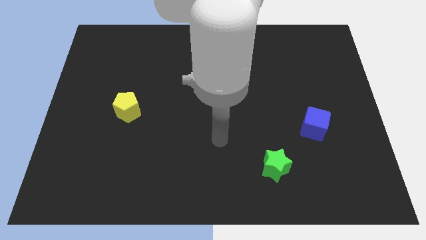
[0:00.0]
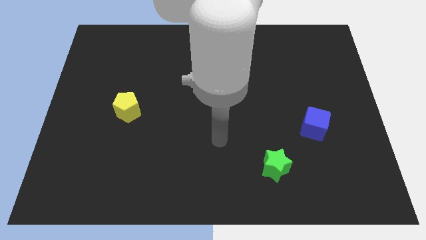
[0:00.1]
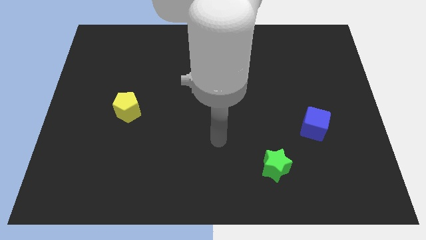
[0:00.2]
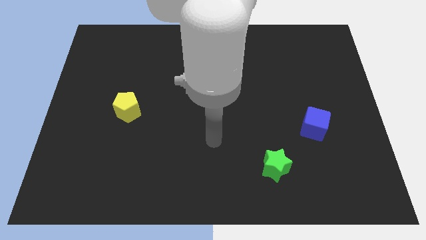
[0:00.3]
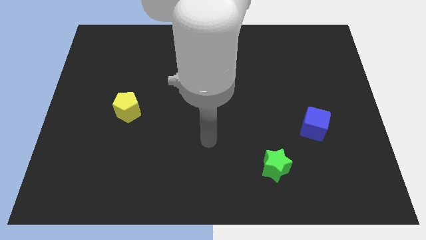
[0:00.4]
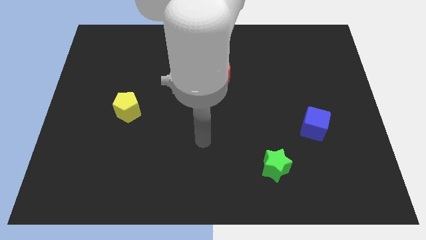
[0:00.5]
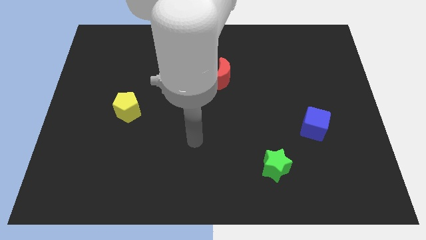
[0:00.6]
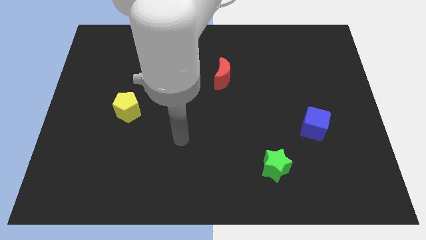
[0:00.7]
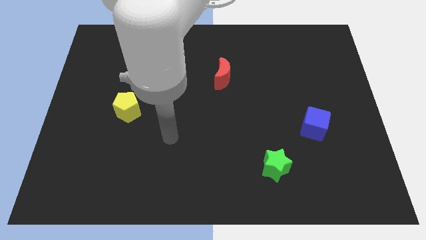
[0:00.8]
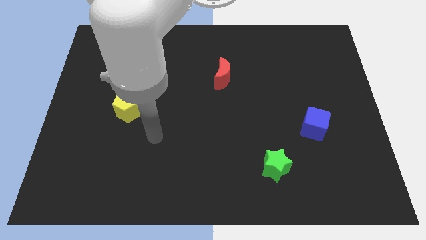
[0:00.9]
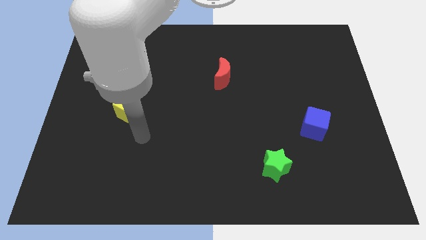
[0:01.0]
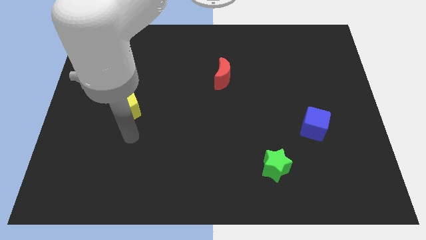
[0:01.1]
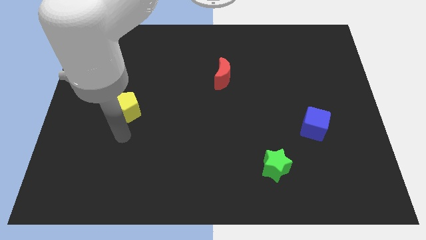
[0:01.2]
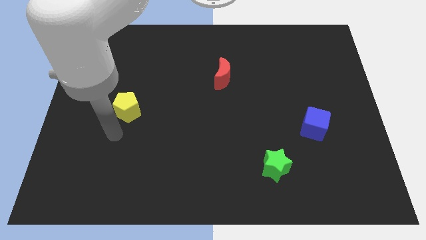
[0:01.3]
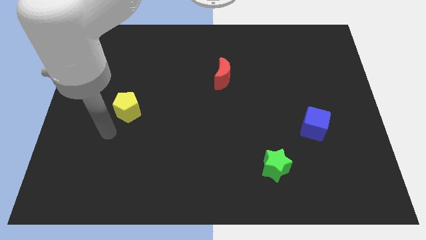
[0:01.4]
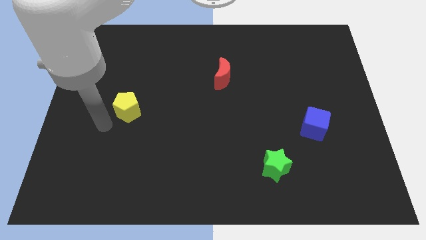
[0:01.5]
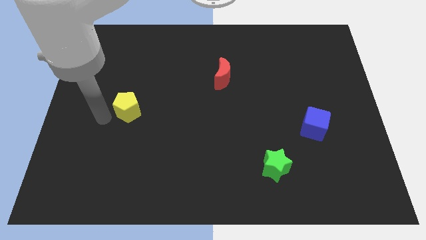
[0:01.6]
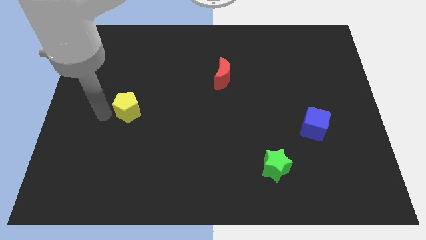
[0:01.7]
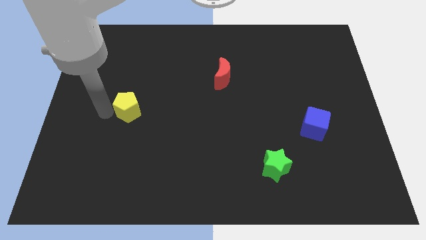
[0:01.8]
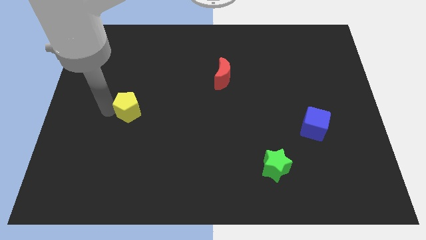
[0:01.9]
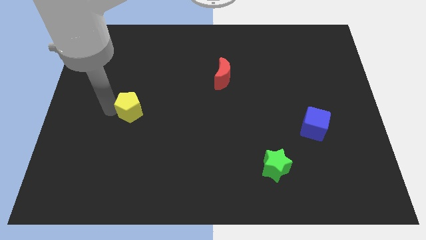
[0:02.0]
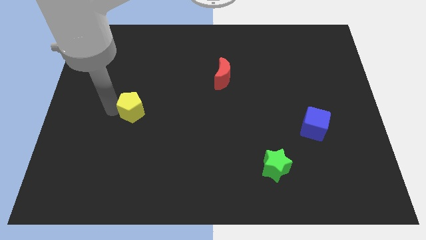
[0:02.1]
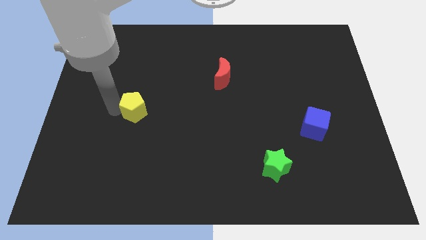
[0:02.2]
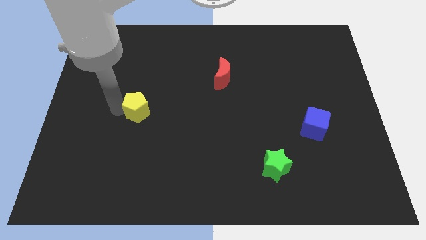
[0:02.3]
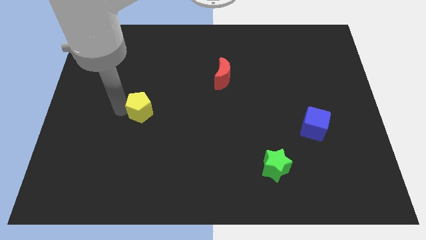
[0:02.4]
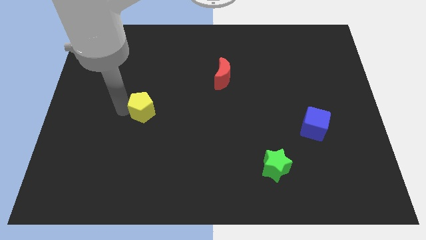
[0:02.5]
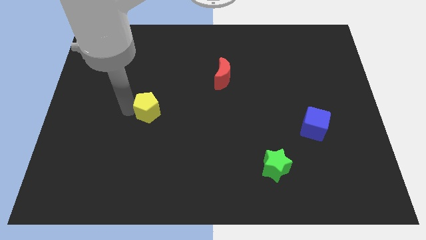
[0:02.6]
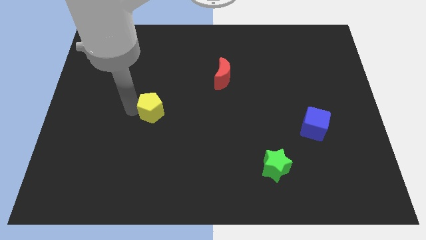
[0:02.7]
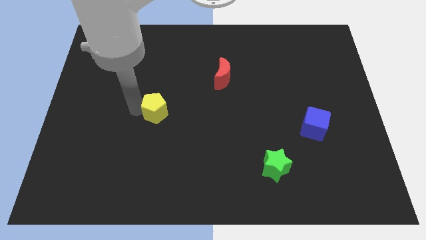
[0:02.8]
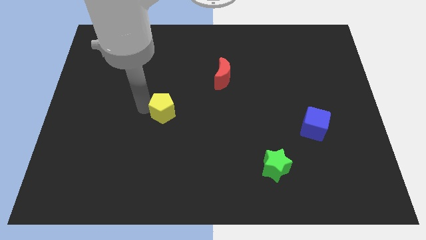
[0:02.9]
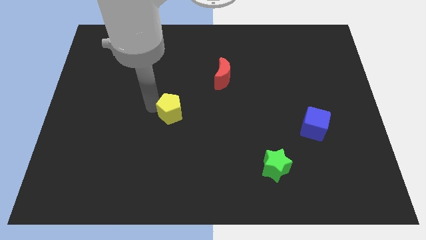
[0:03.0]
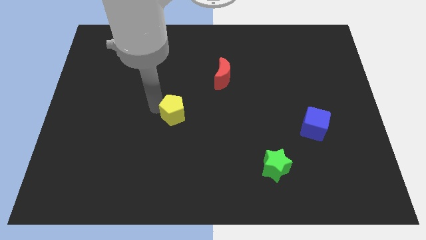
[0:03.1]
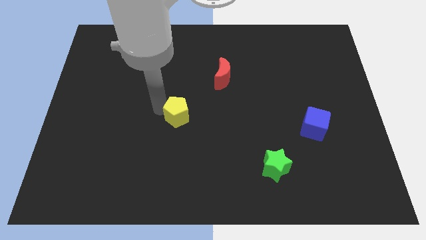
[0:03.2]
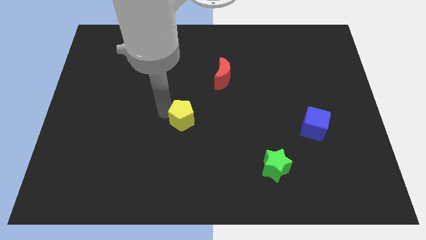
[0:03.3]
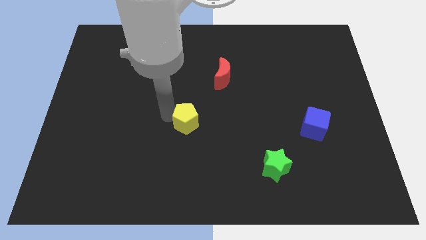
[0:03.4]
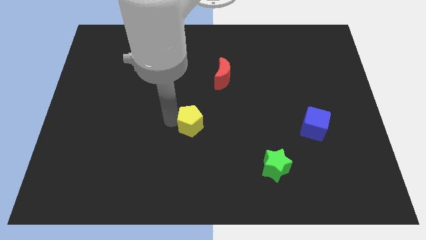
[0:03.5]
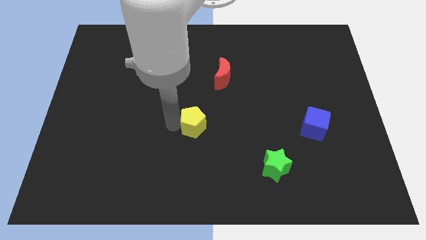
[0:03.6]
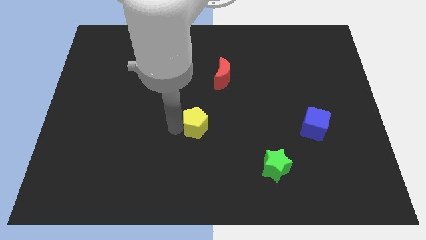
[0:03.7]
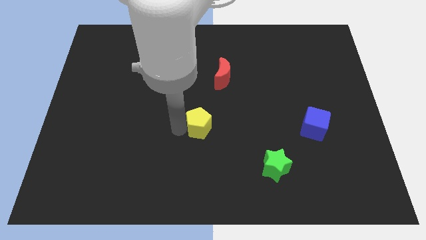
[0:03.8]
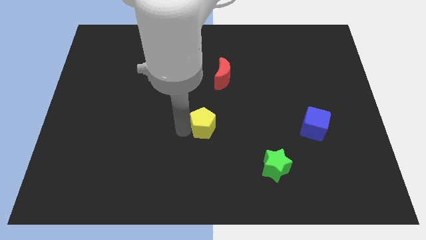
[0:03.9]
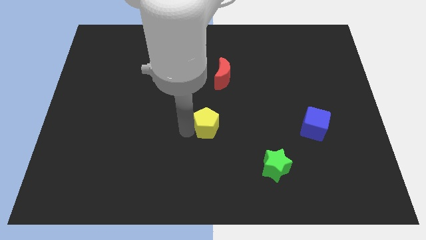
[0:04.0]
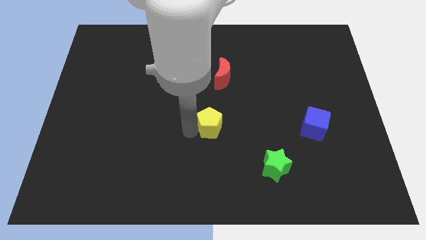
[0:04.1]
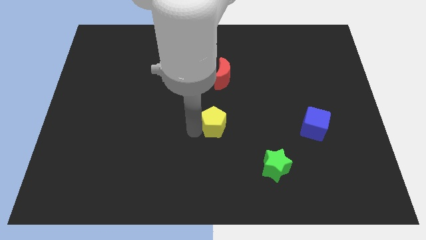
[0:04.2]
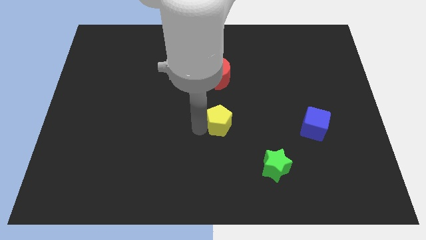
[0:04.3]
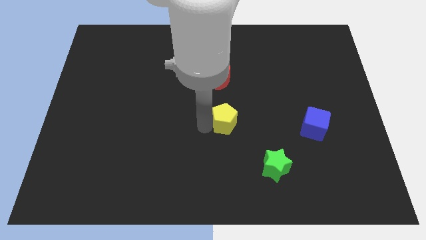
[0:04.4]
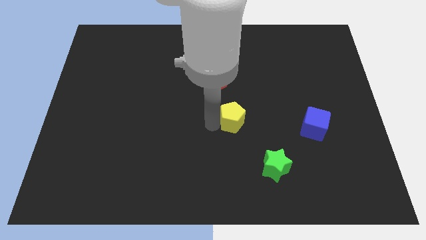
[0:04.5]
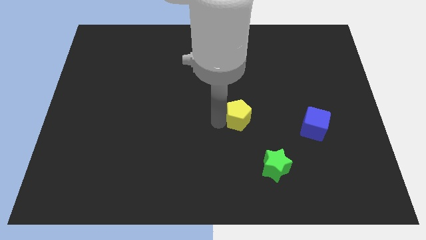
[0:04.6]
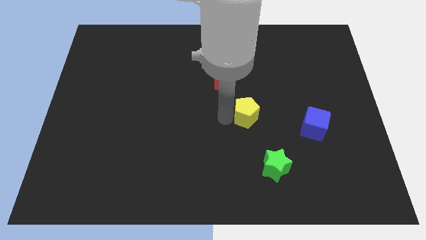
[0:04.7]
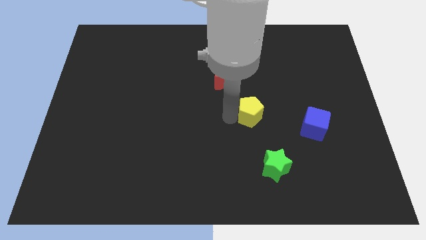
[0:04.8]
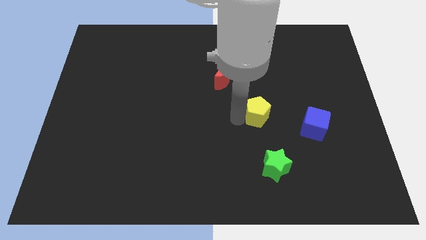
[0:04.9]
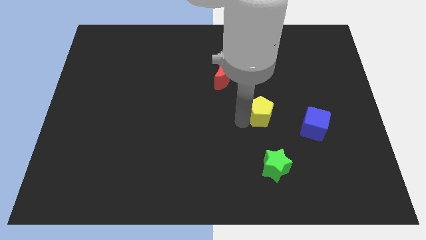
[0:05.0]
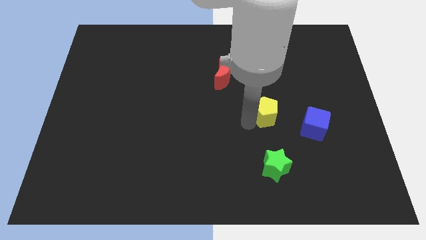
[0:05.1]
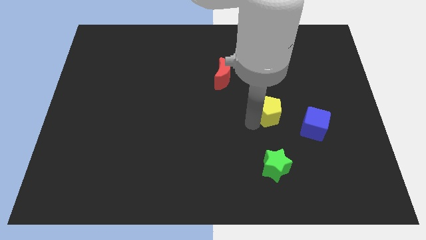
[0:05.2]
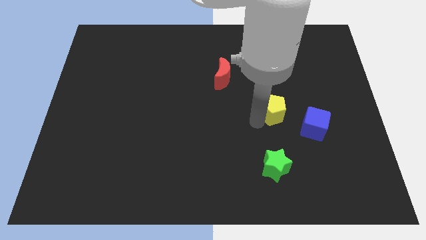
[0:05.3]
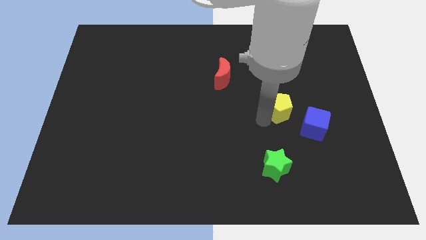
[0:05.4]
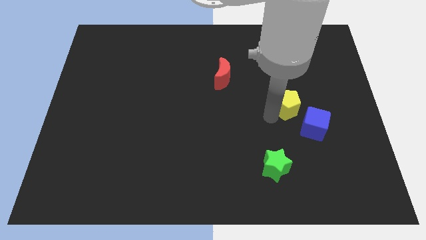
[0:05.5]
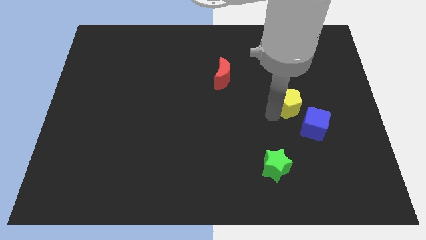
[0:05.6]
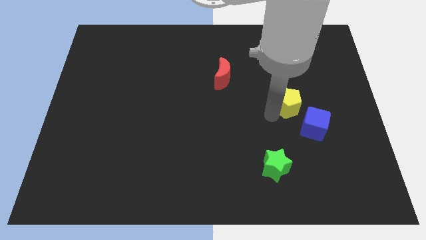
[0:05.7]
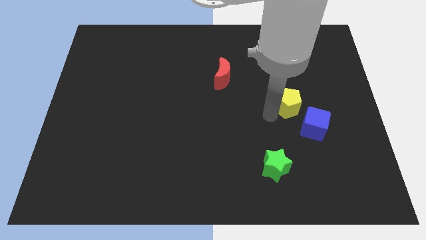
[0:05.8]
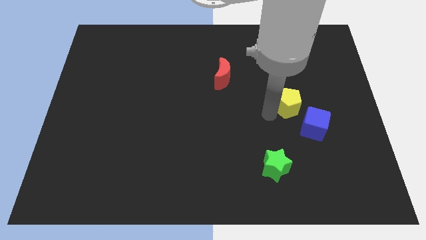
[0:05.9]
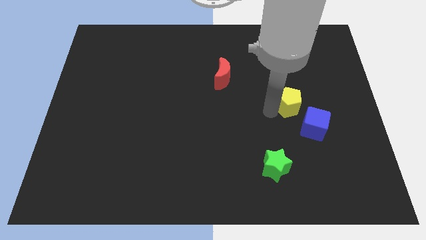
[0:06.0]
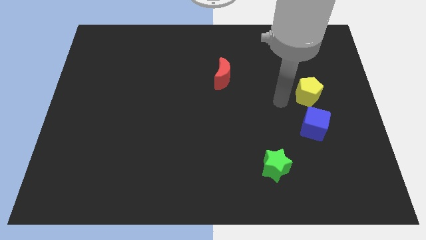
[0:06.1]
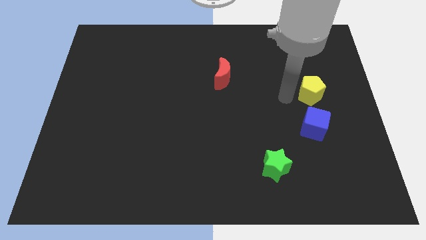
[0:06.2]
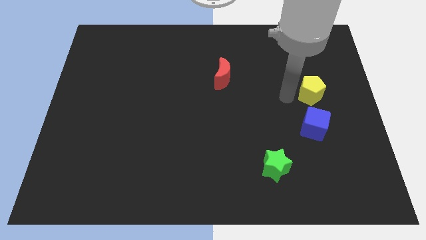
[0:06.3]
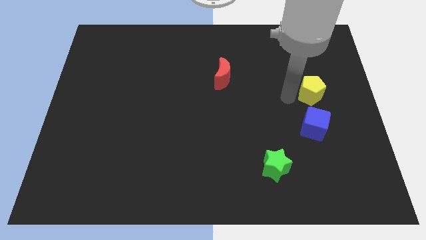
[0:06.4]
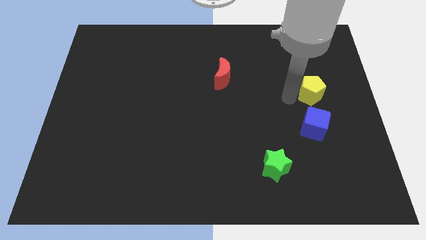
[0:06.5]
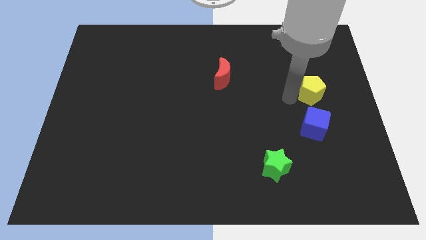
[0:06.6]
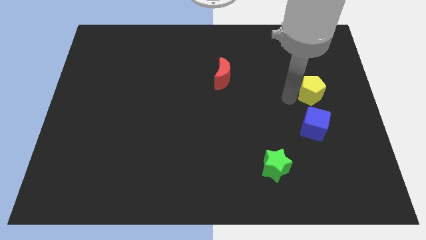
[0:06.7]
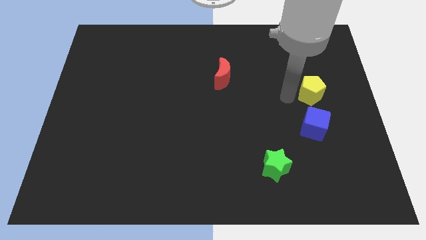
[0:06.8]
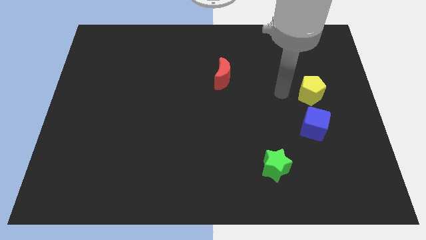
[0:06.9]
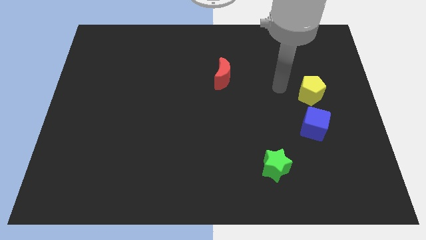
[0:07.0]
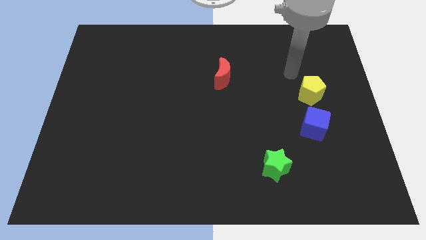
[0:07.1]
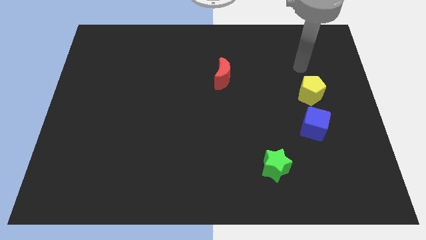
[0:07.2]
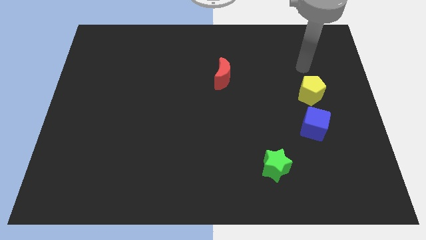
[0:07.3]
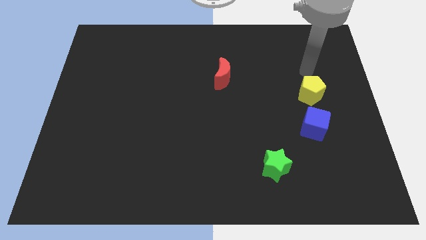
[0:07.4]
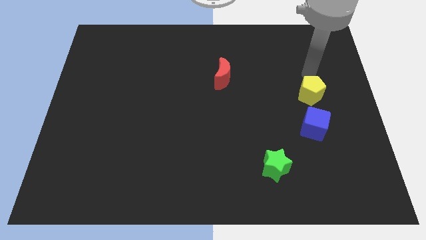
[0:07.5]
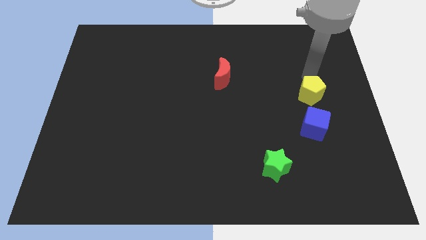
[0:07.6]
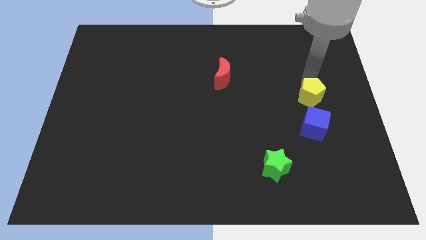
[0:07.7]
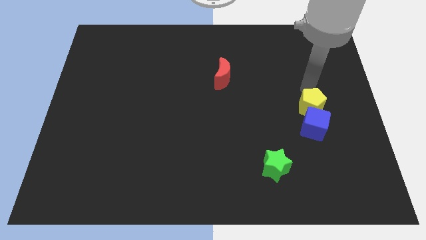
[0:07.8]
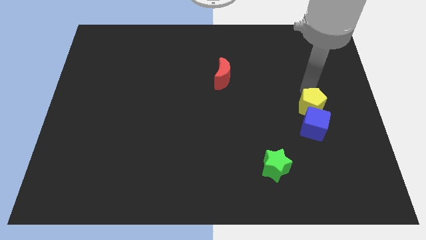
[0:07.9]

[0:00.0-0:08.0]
put the yellow block towards the blue block

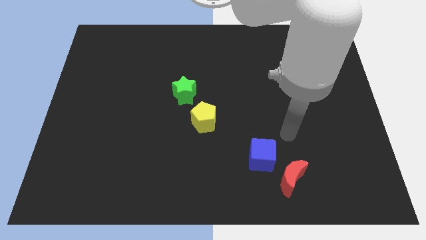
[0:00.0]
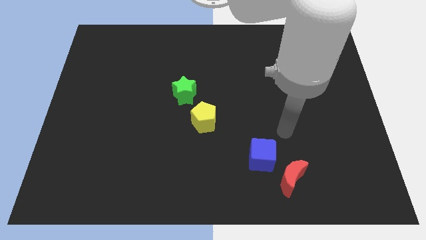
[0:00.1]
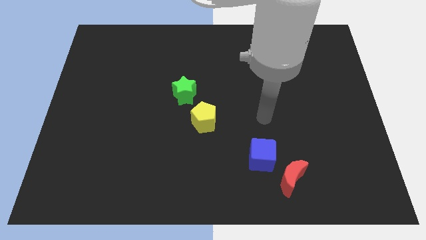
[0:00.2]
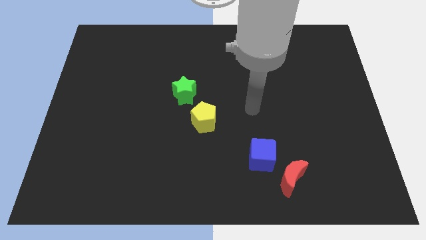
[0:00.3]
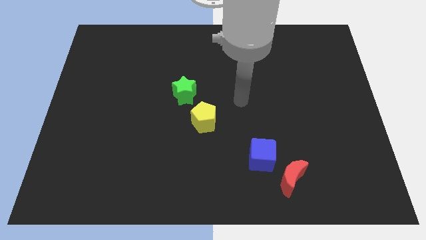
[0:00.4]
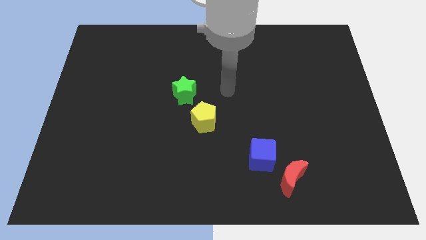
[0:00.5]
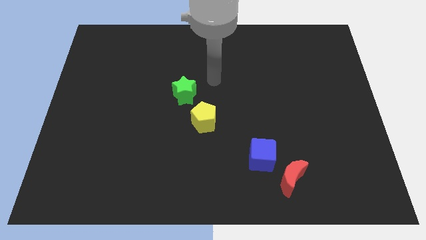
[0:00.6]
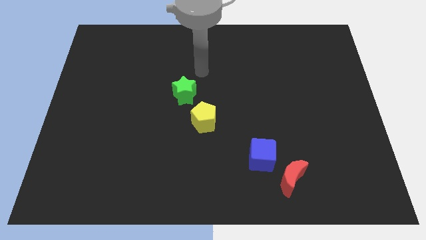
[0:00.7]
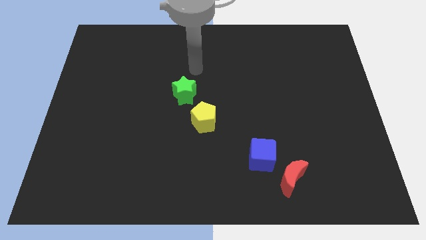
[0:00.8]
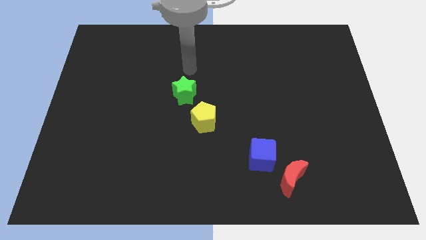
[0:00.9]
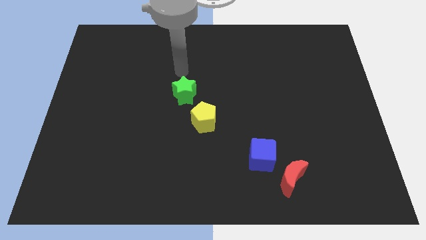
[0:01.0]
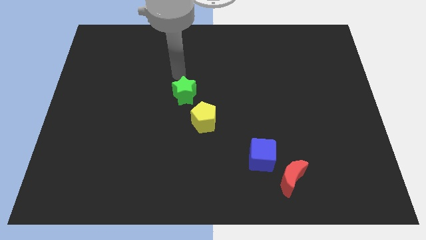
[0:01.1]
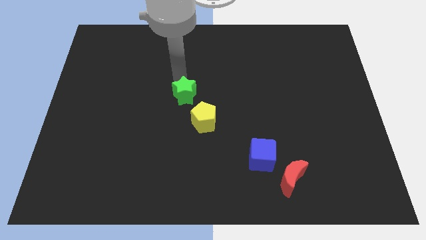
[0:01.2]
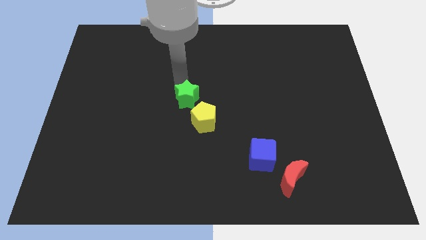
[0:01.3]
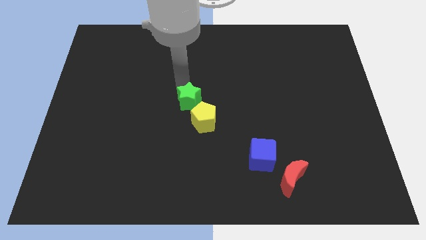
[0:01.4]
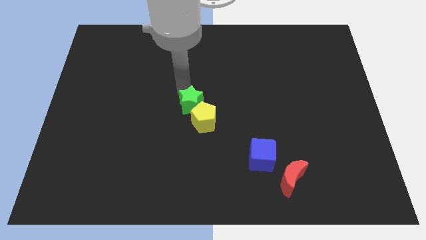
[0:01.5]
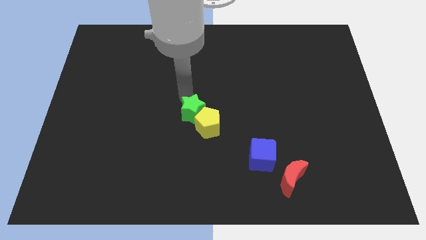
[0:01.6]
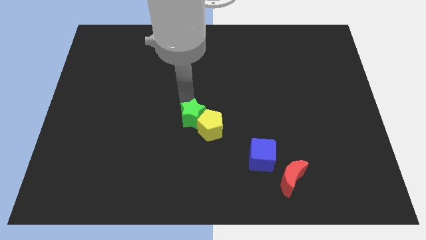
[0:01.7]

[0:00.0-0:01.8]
push the green star to the pentagon
